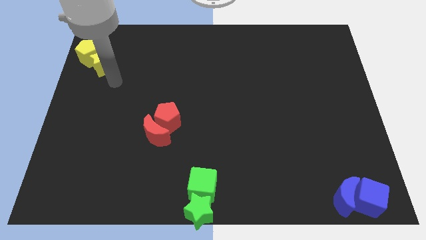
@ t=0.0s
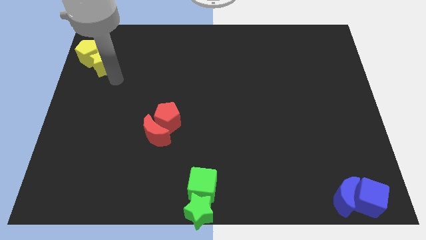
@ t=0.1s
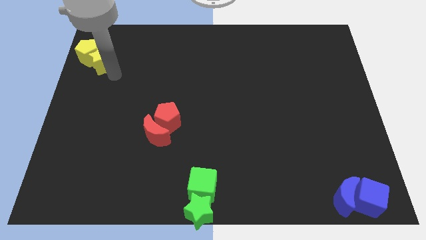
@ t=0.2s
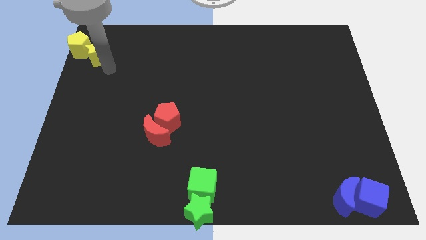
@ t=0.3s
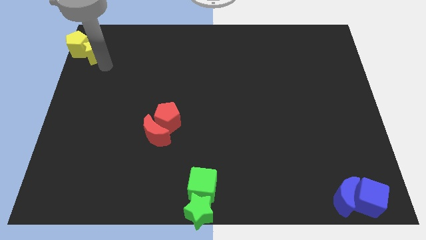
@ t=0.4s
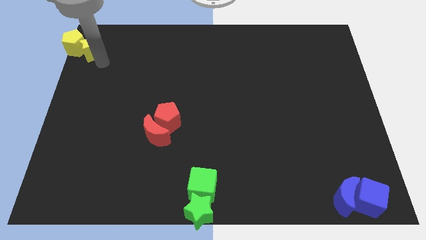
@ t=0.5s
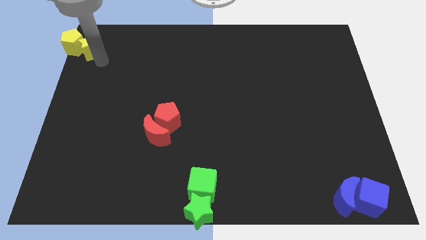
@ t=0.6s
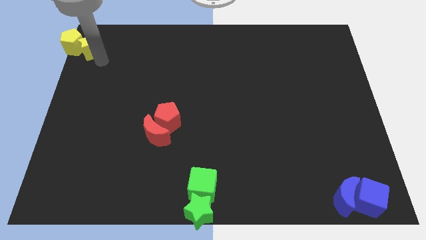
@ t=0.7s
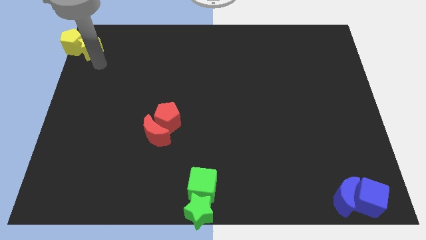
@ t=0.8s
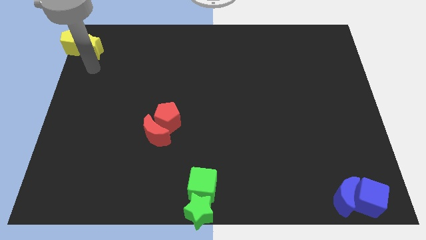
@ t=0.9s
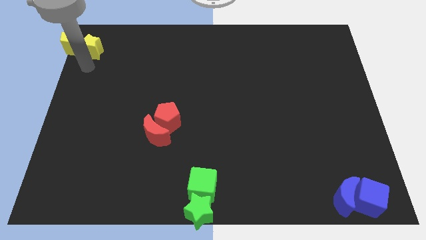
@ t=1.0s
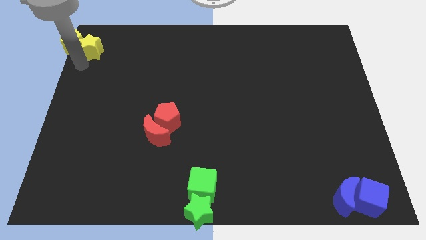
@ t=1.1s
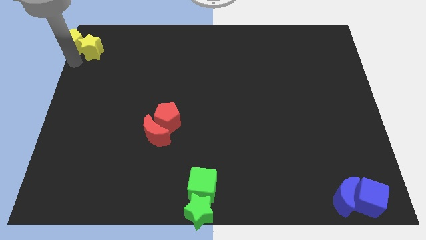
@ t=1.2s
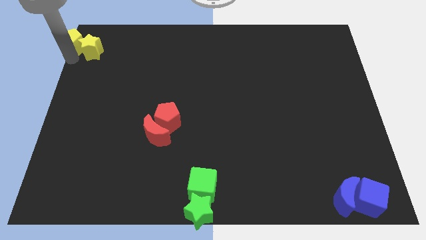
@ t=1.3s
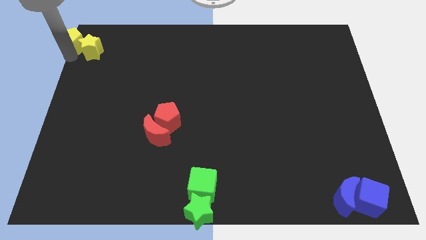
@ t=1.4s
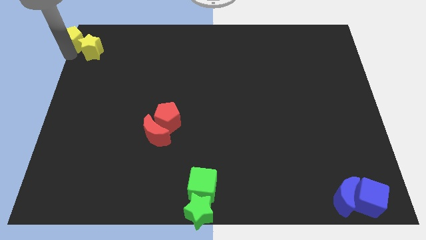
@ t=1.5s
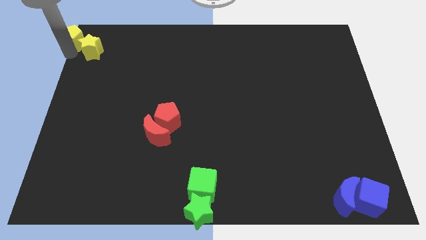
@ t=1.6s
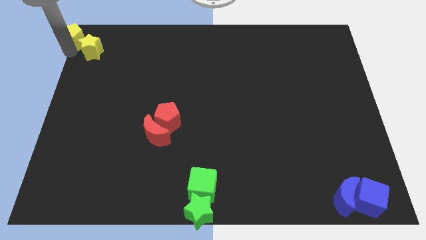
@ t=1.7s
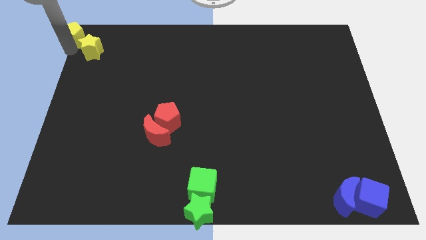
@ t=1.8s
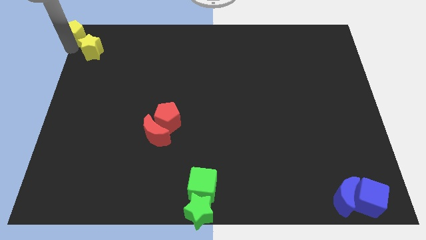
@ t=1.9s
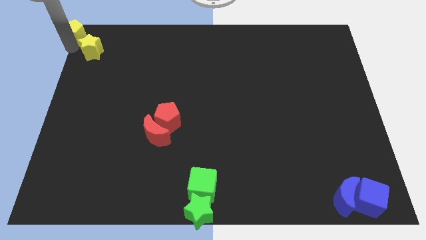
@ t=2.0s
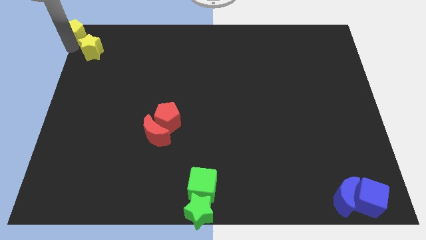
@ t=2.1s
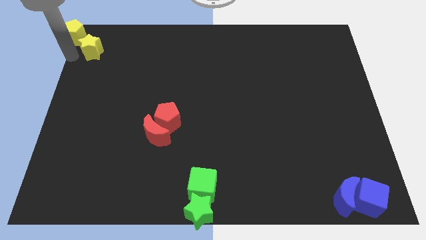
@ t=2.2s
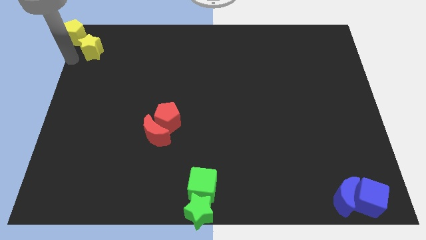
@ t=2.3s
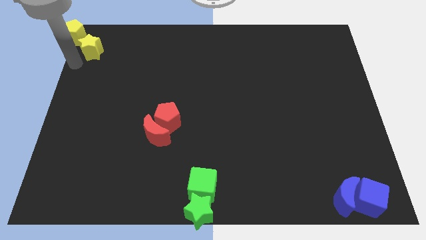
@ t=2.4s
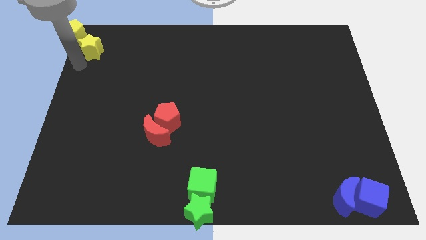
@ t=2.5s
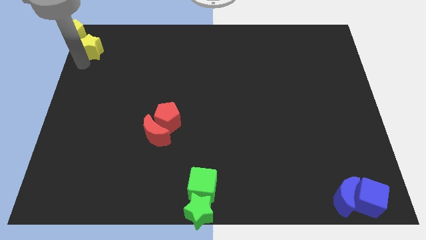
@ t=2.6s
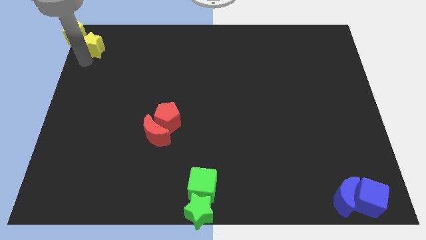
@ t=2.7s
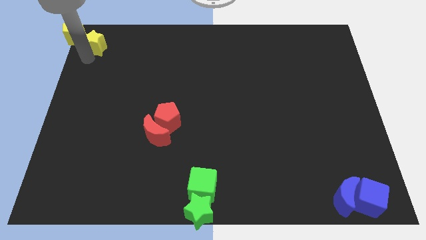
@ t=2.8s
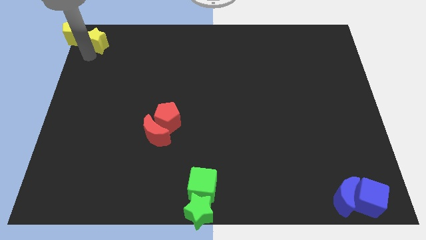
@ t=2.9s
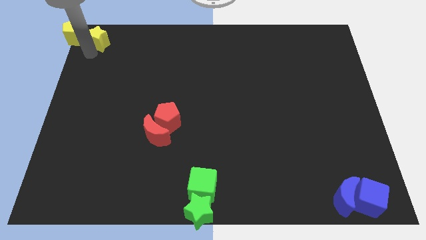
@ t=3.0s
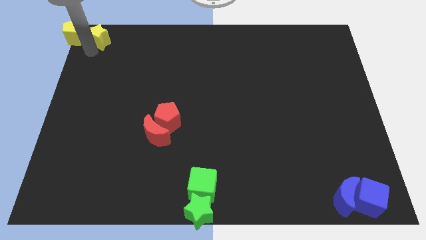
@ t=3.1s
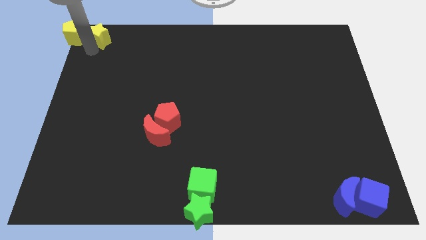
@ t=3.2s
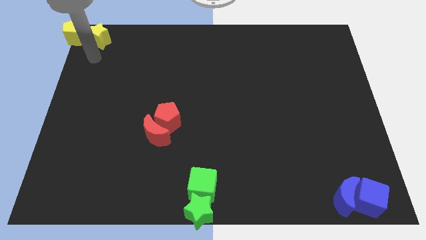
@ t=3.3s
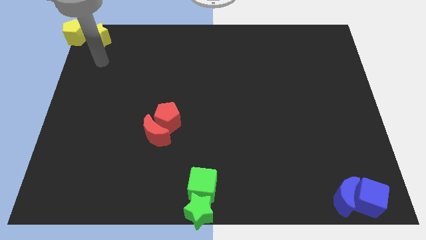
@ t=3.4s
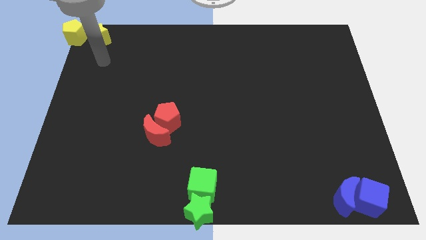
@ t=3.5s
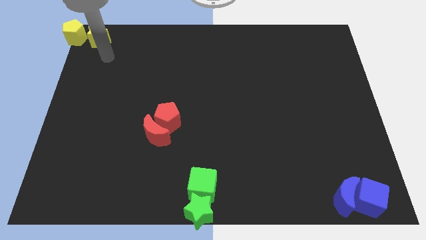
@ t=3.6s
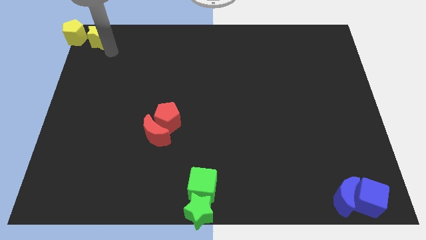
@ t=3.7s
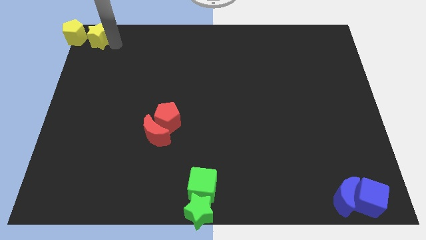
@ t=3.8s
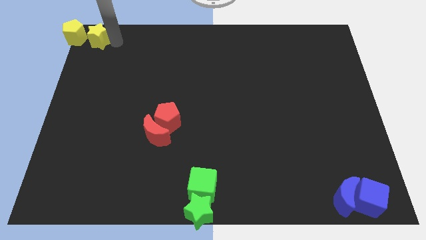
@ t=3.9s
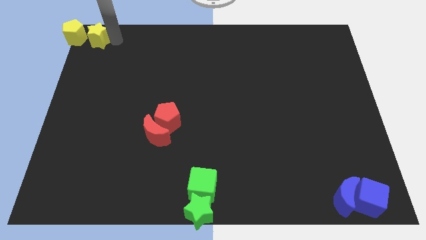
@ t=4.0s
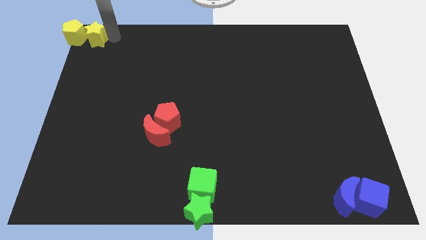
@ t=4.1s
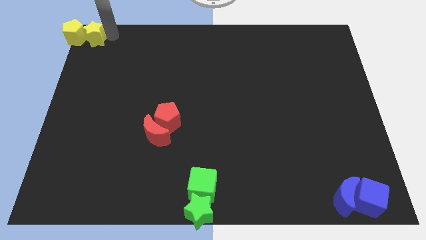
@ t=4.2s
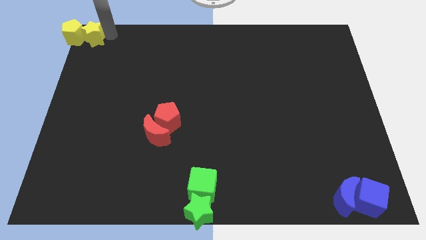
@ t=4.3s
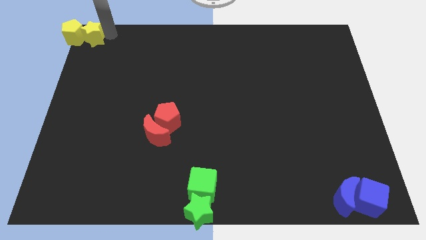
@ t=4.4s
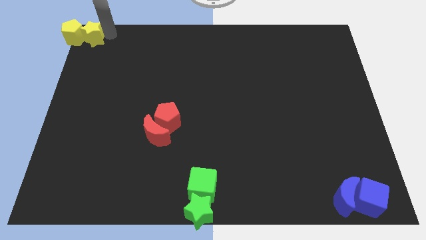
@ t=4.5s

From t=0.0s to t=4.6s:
move the yellow star and yellow pentagon to the top left corner of the board

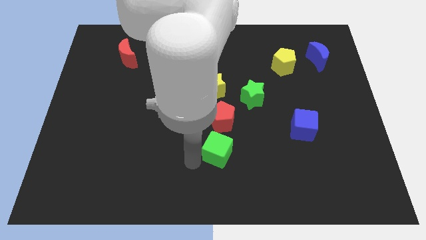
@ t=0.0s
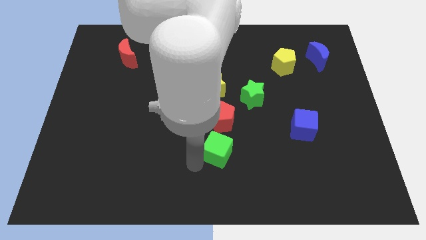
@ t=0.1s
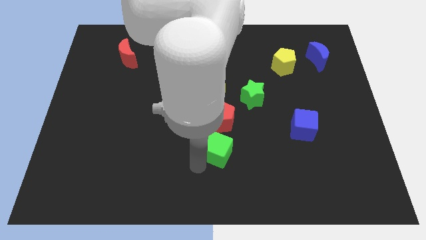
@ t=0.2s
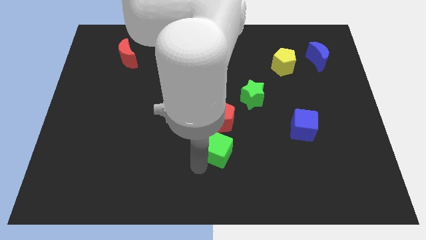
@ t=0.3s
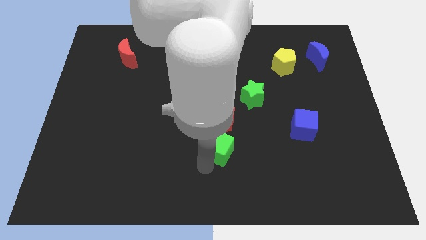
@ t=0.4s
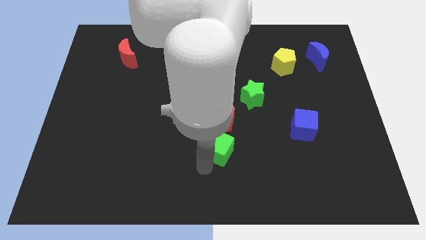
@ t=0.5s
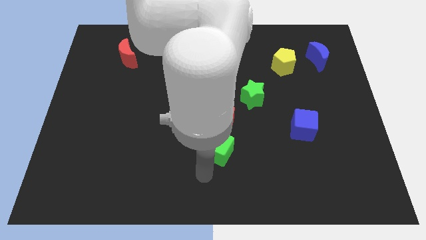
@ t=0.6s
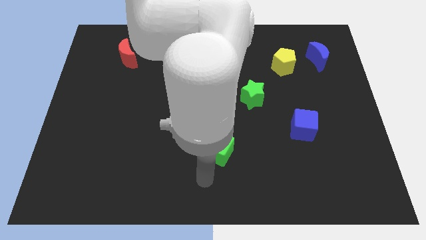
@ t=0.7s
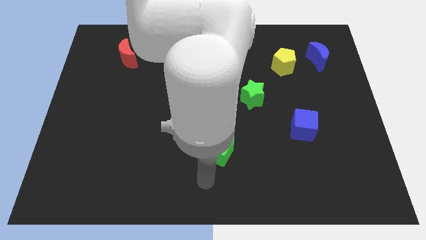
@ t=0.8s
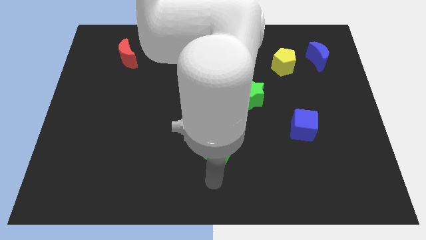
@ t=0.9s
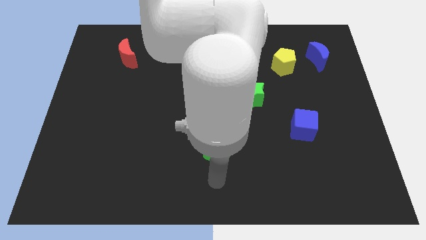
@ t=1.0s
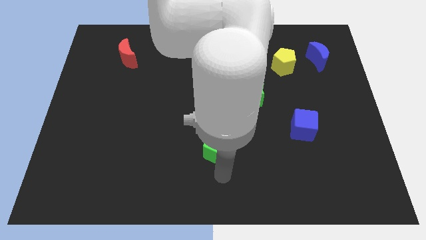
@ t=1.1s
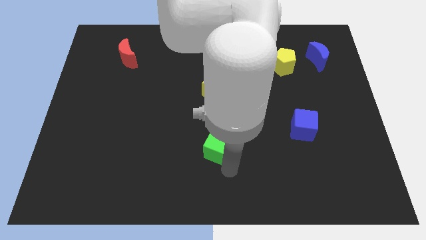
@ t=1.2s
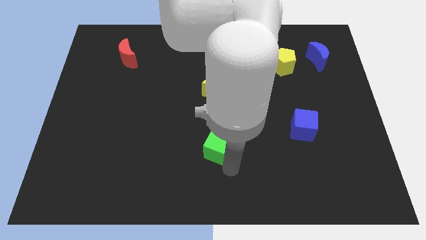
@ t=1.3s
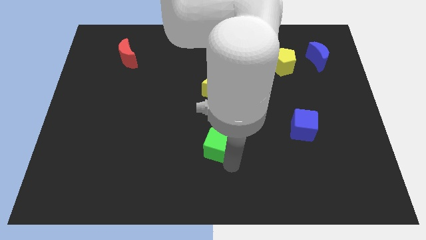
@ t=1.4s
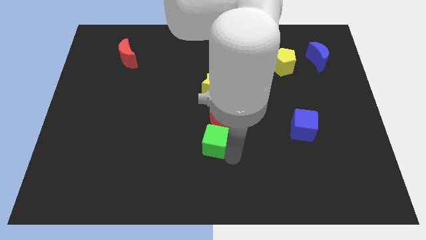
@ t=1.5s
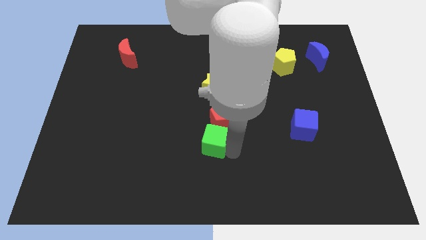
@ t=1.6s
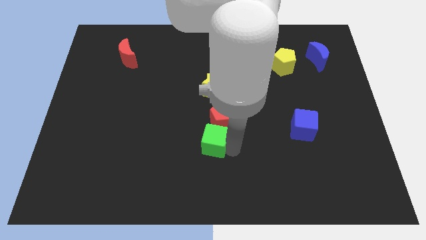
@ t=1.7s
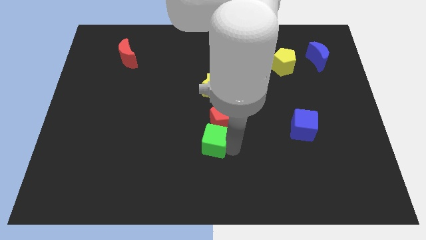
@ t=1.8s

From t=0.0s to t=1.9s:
place green cube to the bottom of red pentagon

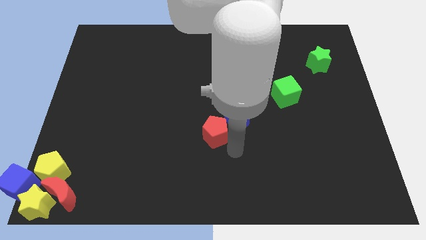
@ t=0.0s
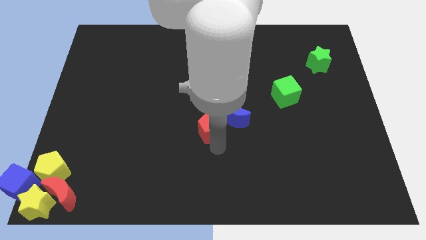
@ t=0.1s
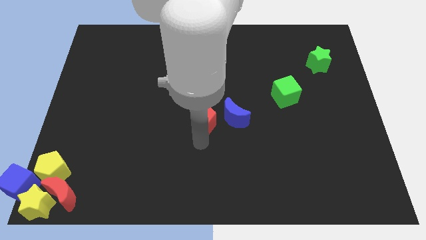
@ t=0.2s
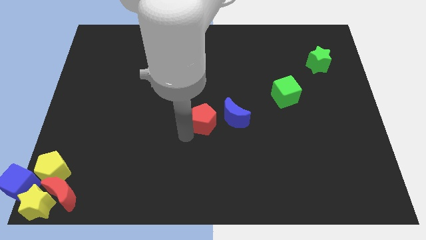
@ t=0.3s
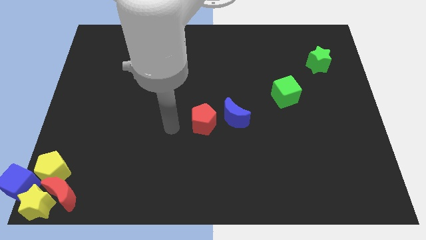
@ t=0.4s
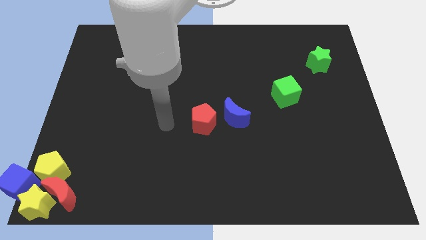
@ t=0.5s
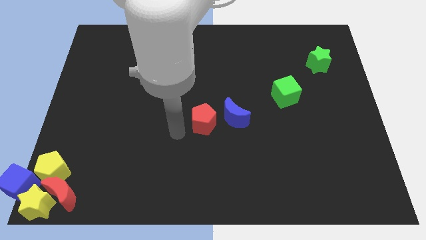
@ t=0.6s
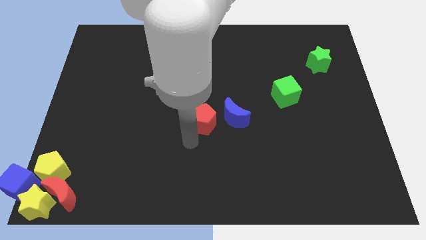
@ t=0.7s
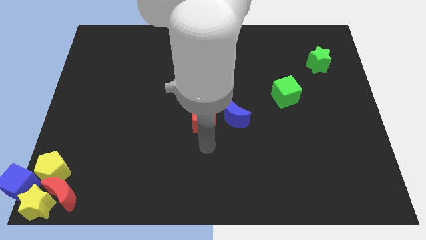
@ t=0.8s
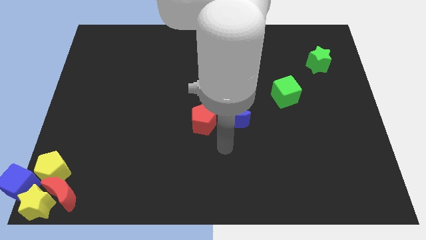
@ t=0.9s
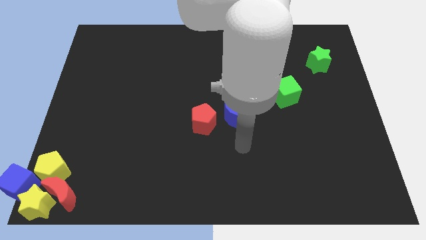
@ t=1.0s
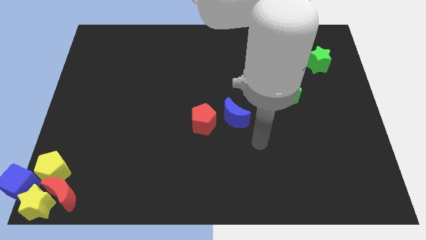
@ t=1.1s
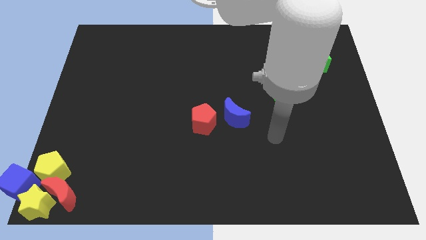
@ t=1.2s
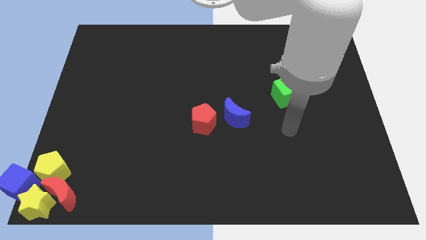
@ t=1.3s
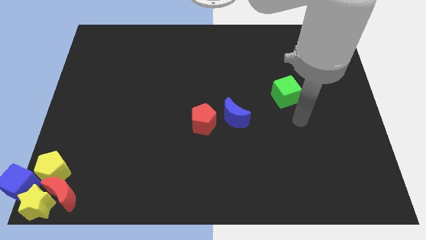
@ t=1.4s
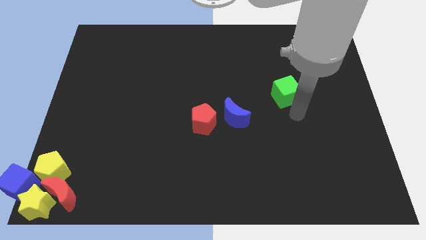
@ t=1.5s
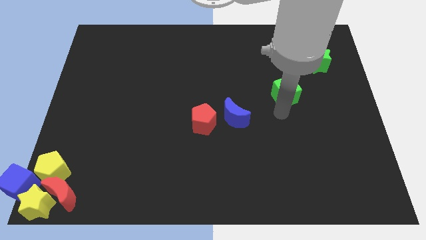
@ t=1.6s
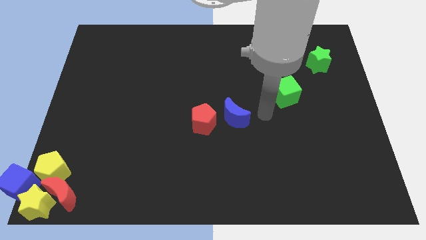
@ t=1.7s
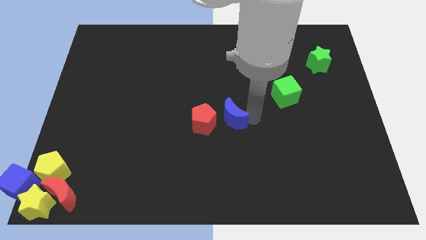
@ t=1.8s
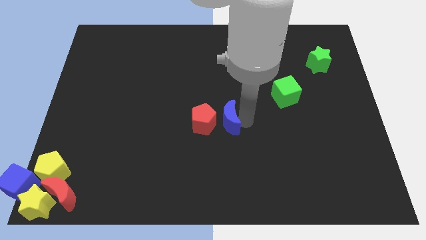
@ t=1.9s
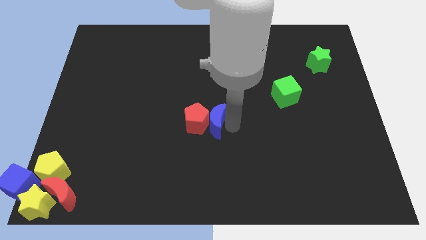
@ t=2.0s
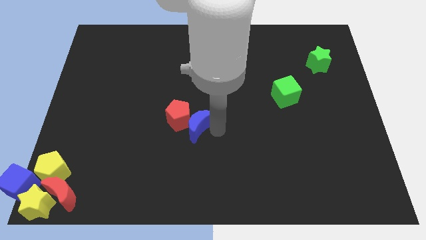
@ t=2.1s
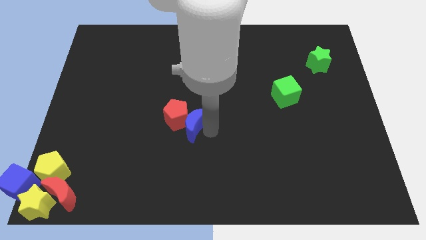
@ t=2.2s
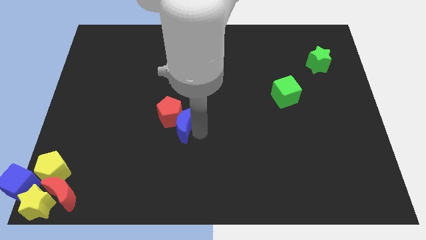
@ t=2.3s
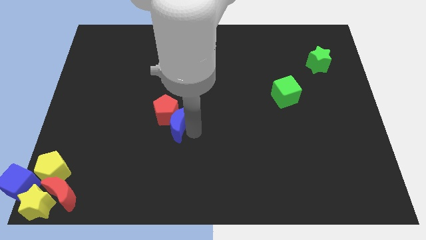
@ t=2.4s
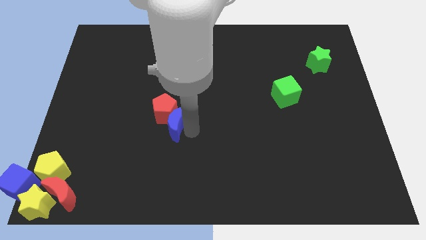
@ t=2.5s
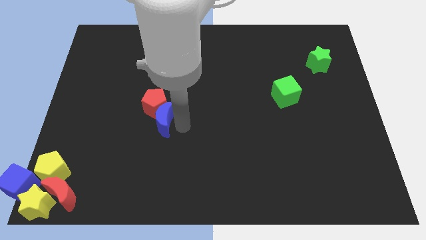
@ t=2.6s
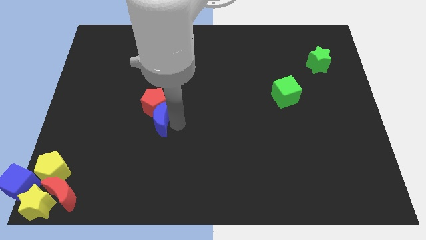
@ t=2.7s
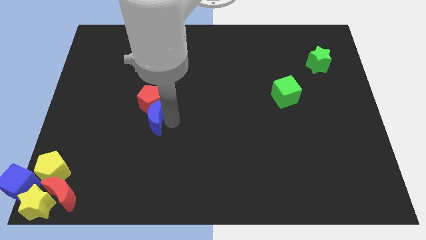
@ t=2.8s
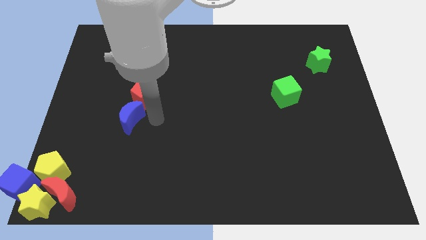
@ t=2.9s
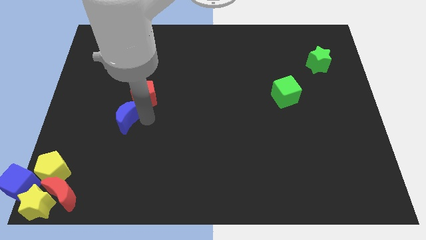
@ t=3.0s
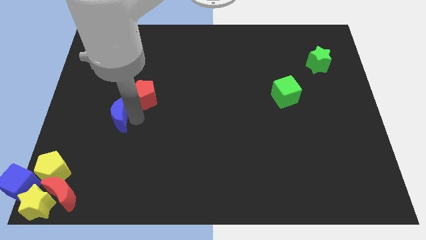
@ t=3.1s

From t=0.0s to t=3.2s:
move blue moon into the red pentagon
